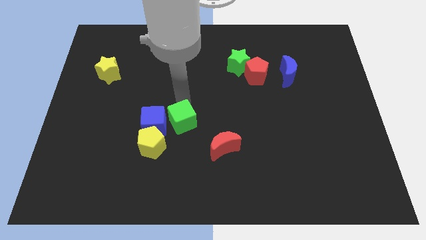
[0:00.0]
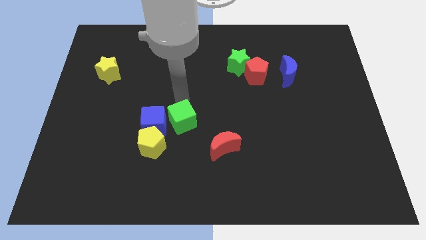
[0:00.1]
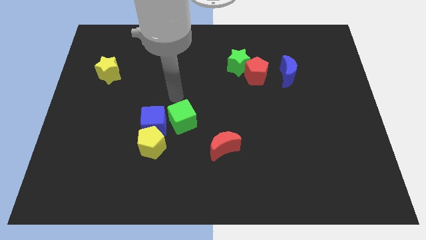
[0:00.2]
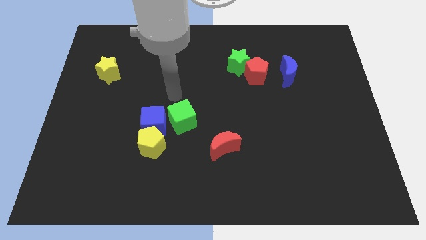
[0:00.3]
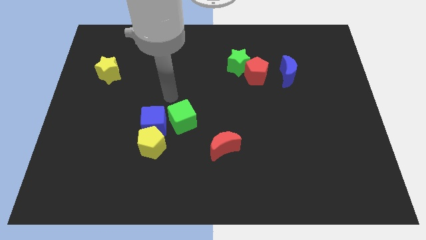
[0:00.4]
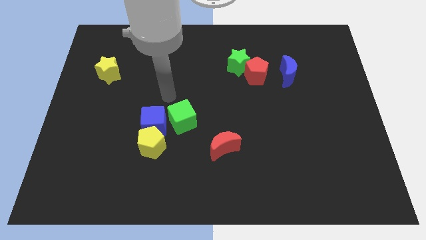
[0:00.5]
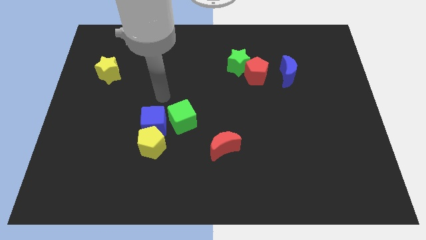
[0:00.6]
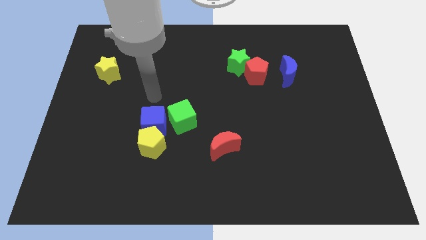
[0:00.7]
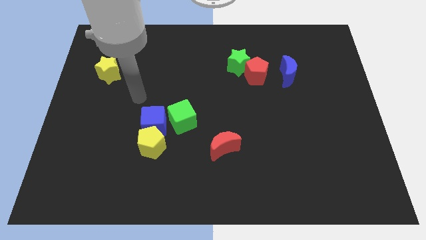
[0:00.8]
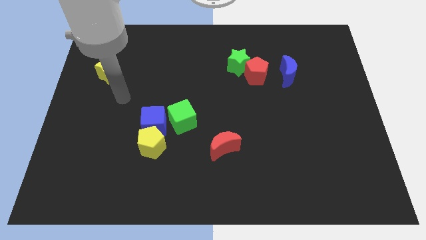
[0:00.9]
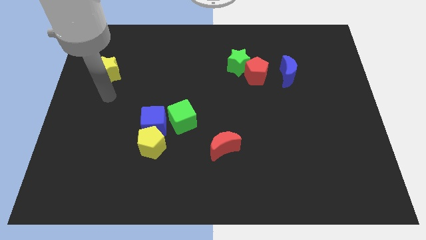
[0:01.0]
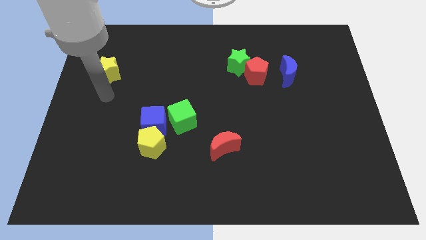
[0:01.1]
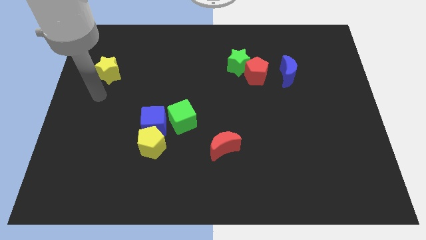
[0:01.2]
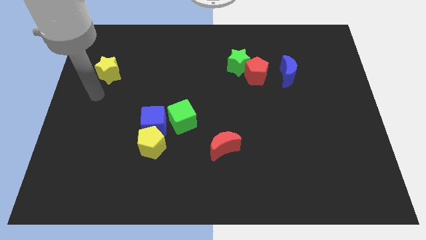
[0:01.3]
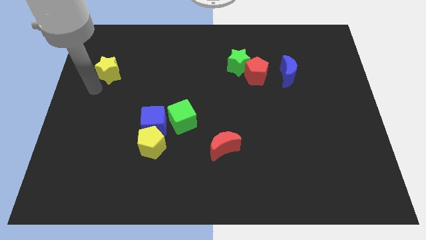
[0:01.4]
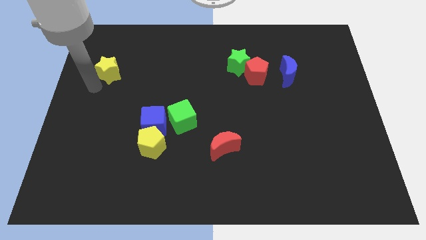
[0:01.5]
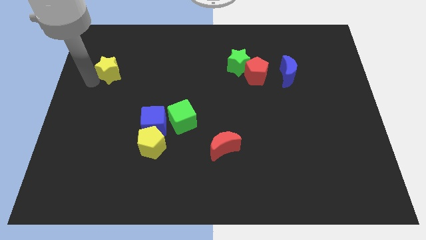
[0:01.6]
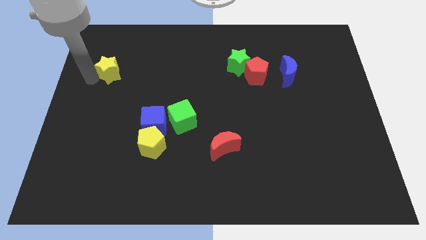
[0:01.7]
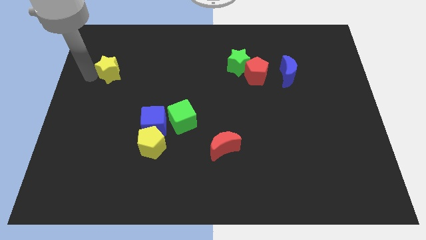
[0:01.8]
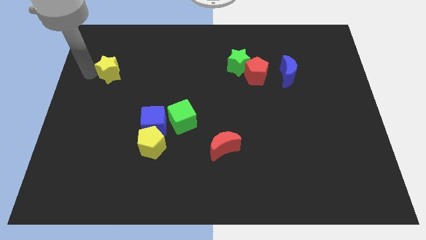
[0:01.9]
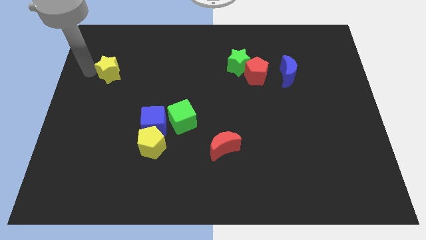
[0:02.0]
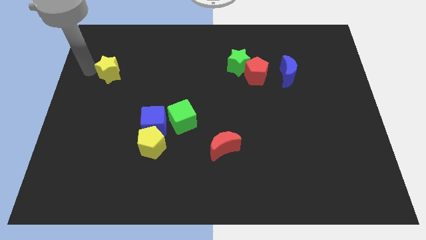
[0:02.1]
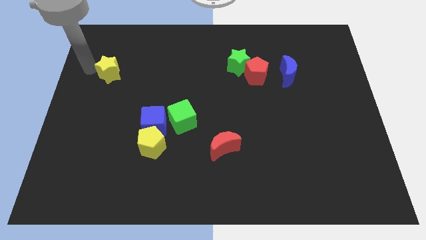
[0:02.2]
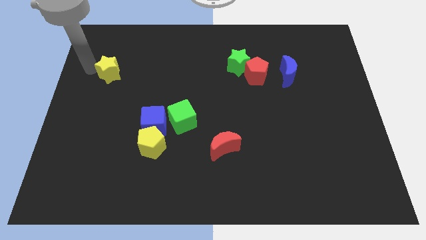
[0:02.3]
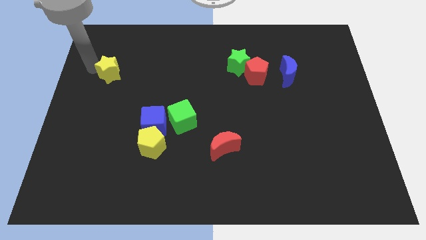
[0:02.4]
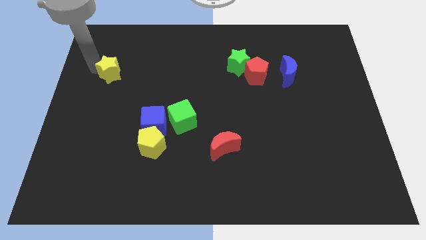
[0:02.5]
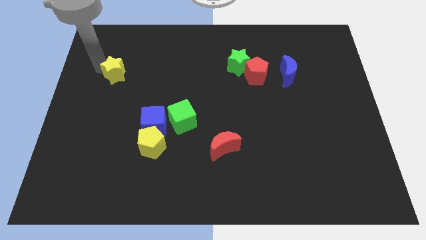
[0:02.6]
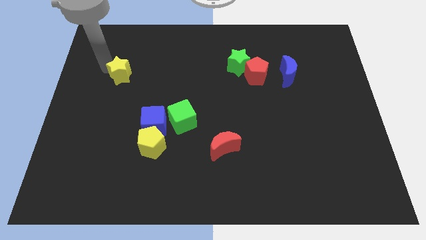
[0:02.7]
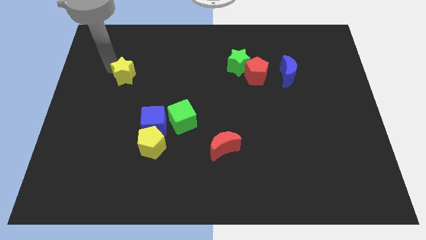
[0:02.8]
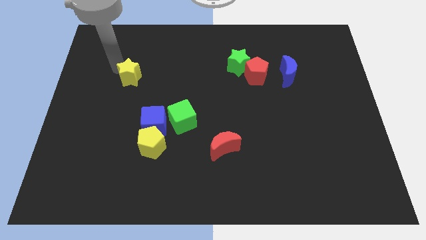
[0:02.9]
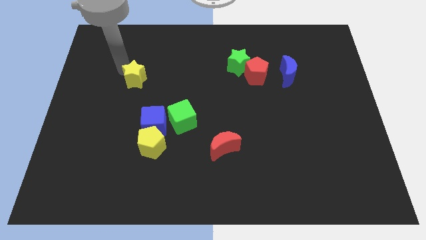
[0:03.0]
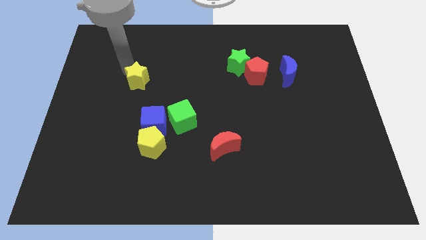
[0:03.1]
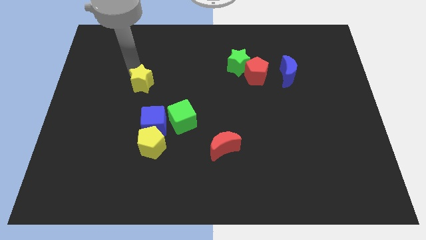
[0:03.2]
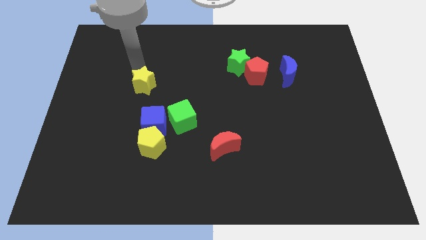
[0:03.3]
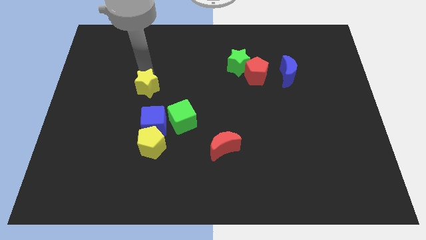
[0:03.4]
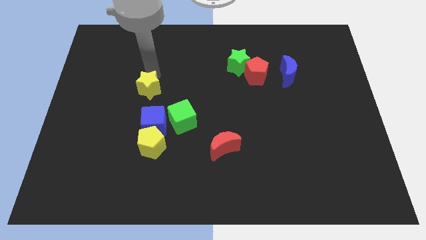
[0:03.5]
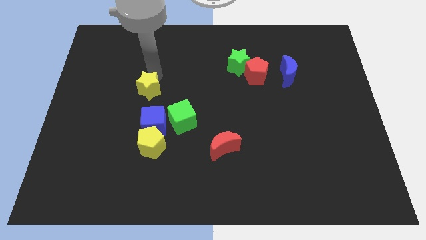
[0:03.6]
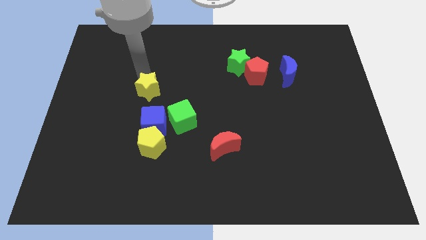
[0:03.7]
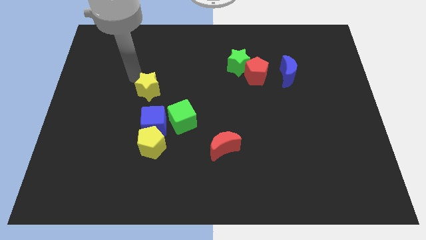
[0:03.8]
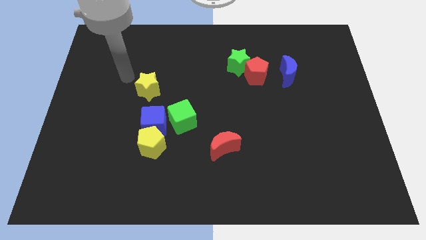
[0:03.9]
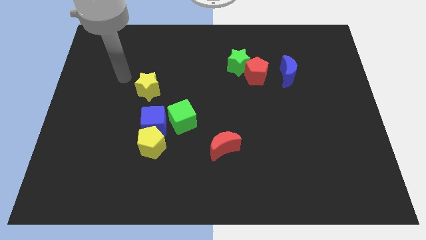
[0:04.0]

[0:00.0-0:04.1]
place yellow star above blue cube

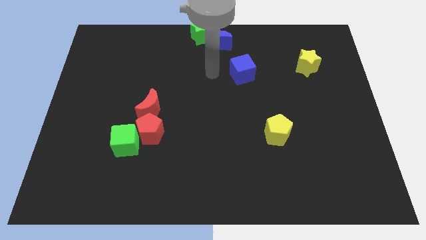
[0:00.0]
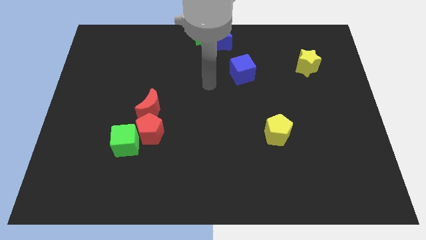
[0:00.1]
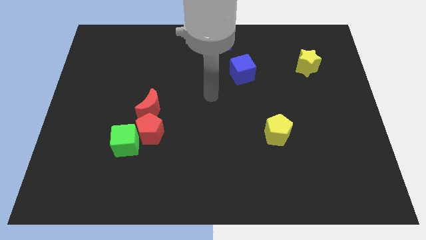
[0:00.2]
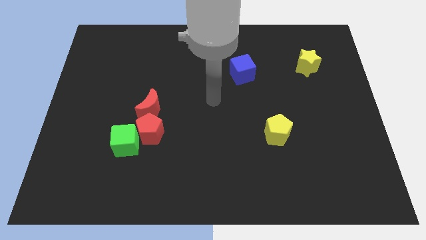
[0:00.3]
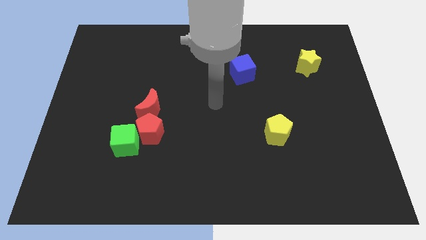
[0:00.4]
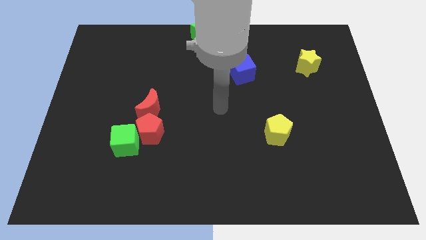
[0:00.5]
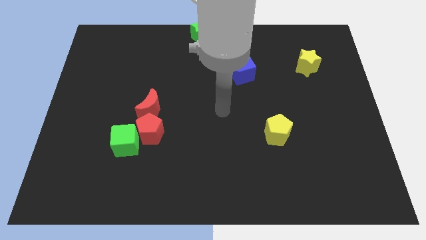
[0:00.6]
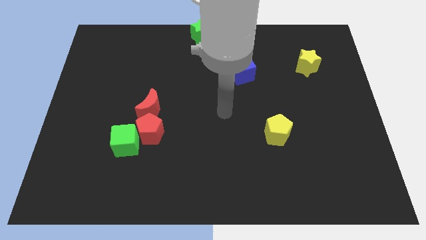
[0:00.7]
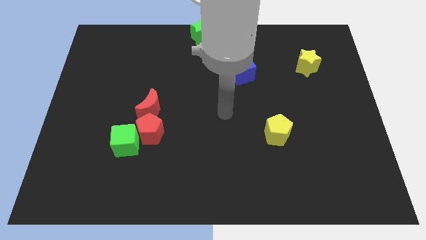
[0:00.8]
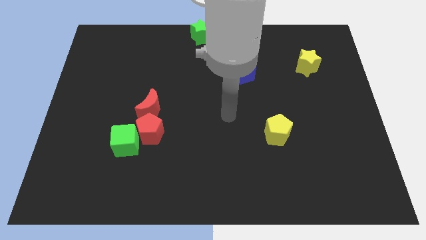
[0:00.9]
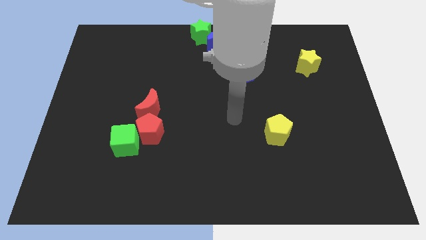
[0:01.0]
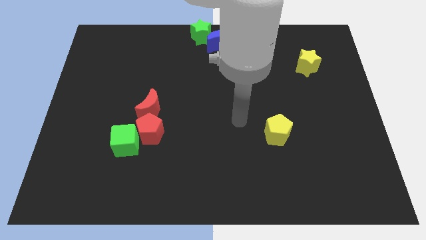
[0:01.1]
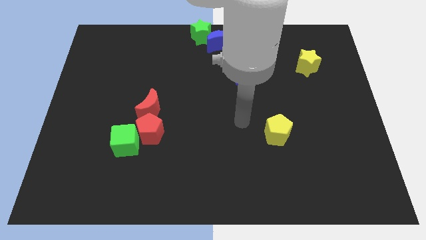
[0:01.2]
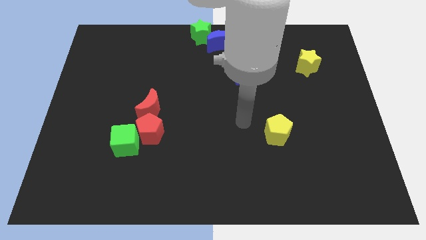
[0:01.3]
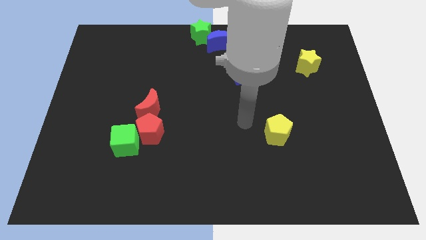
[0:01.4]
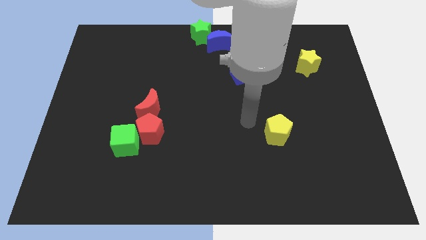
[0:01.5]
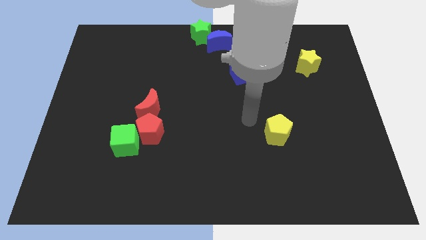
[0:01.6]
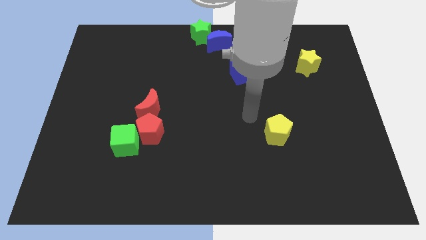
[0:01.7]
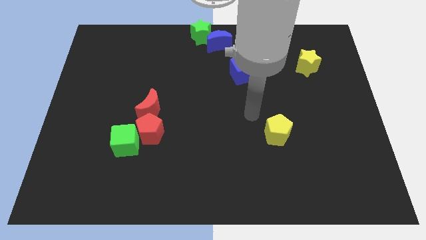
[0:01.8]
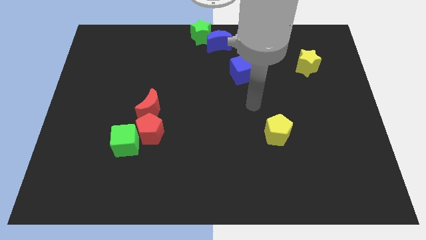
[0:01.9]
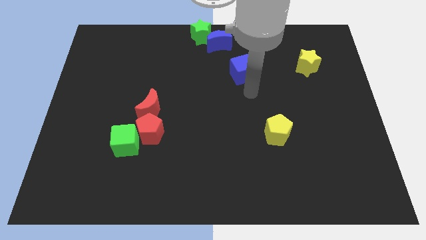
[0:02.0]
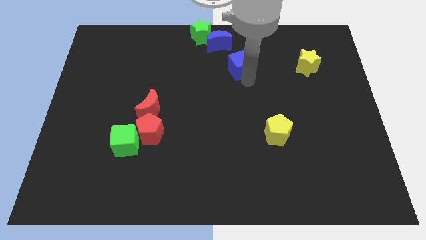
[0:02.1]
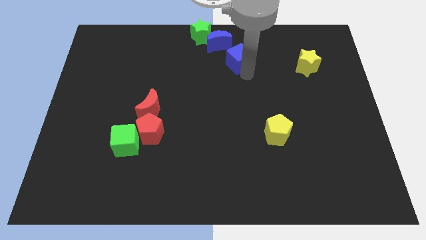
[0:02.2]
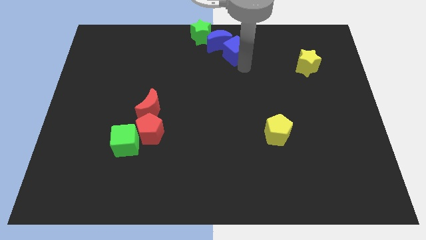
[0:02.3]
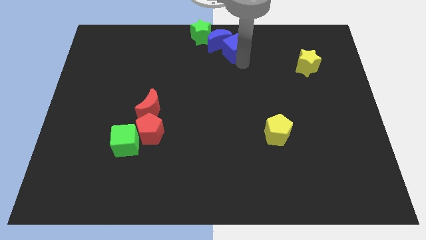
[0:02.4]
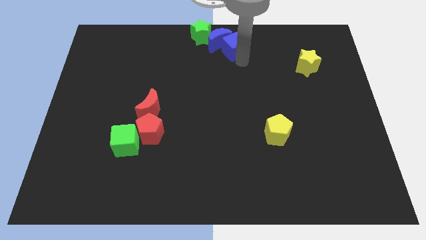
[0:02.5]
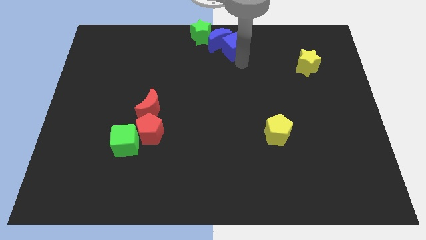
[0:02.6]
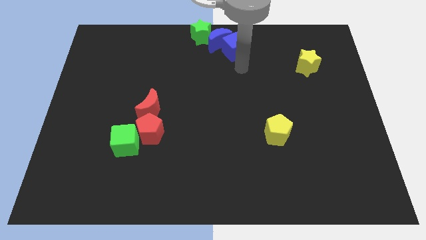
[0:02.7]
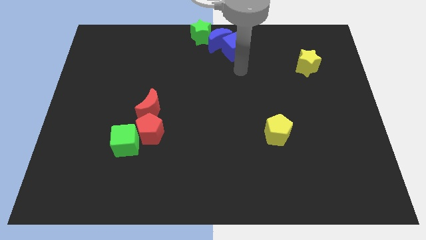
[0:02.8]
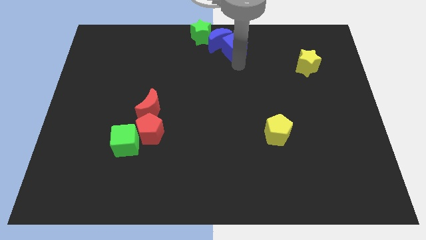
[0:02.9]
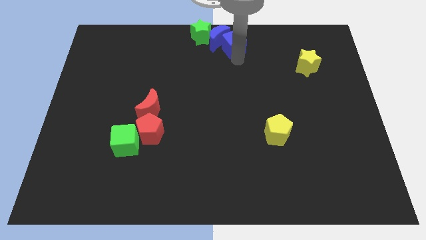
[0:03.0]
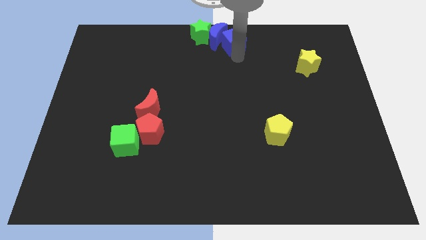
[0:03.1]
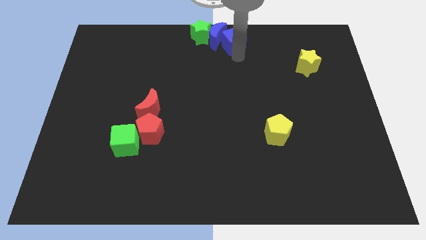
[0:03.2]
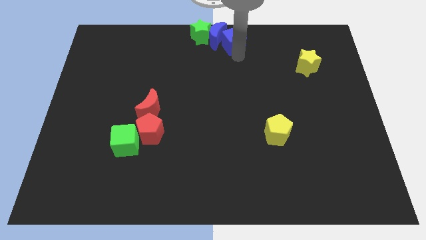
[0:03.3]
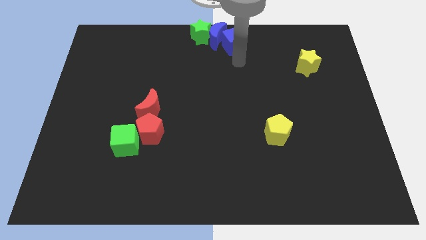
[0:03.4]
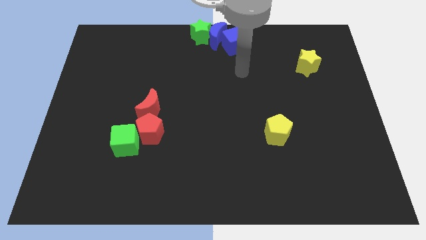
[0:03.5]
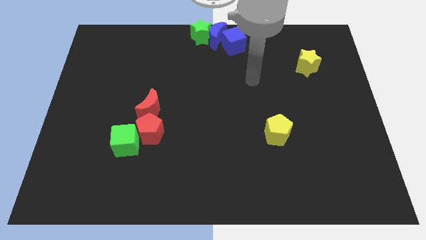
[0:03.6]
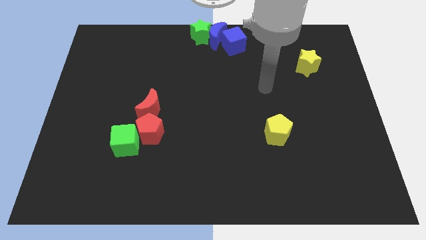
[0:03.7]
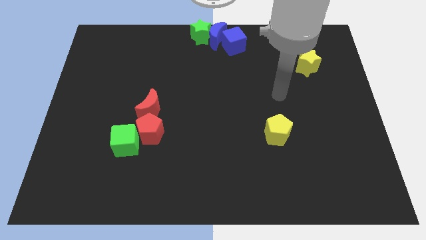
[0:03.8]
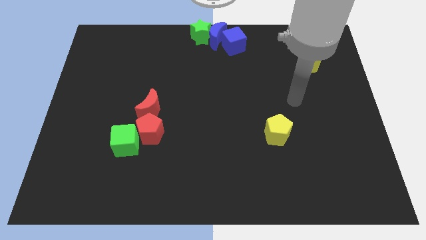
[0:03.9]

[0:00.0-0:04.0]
move the blue cube to the right of the blue crescent

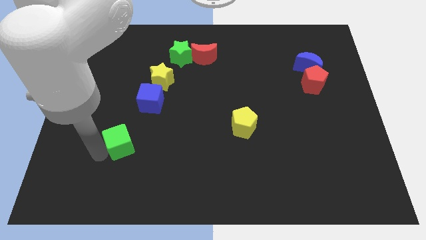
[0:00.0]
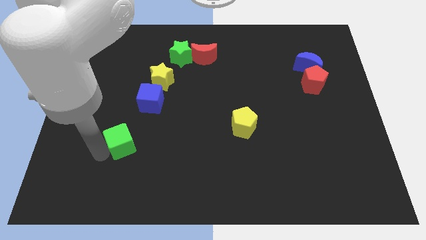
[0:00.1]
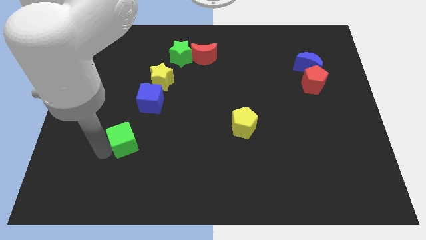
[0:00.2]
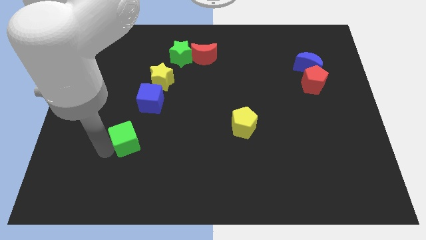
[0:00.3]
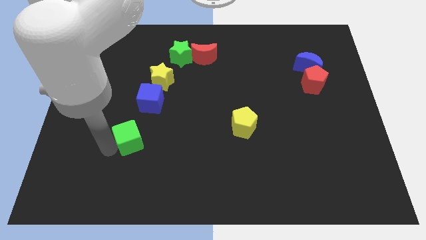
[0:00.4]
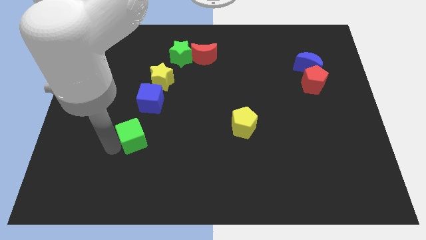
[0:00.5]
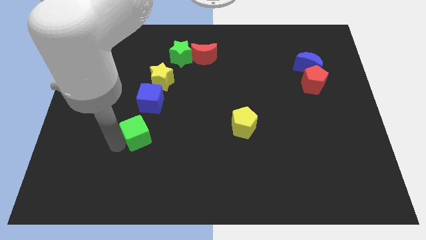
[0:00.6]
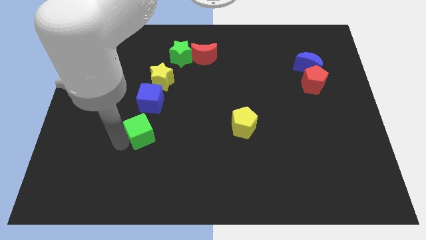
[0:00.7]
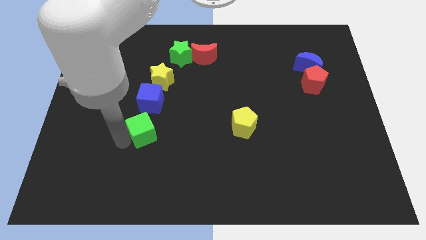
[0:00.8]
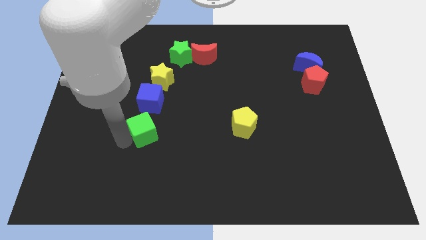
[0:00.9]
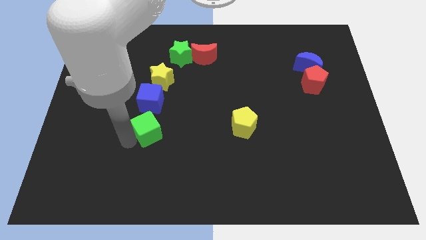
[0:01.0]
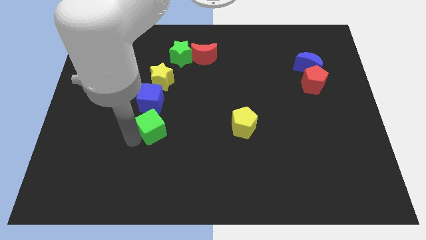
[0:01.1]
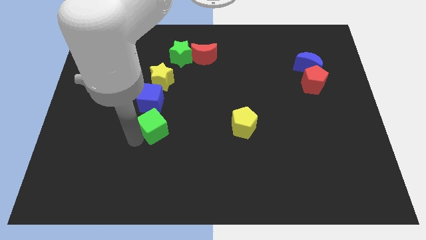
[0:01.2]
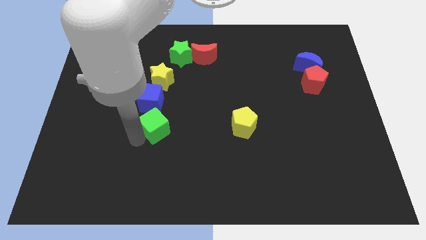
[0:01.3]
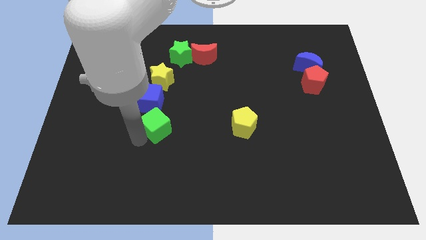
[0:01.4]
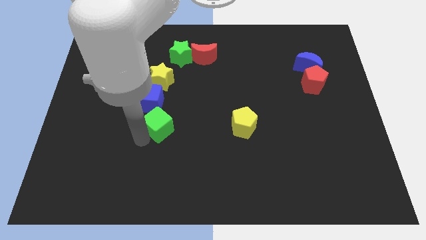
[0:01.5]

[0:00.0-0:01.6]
move the green cube close to the blue cube
